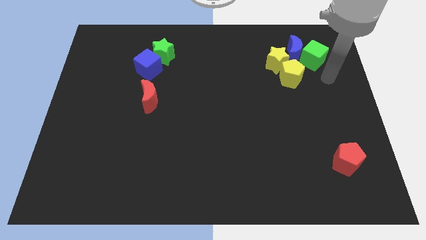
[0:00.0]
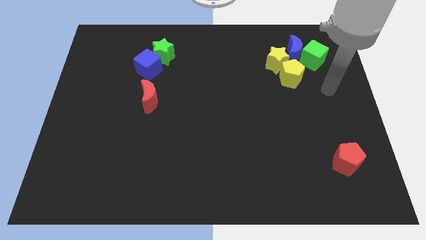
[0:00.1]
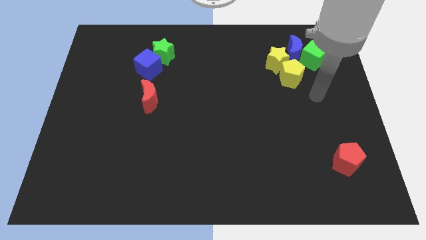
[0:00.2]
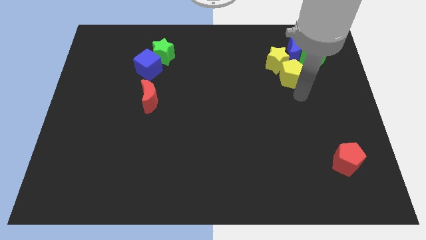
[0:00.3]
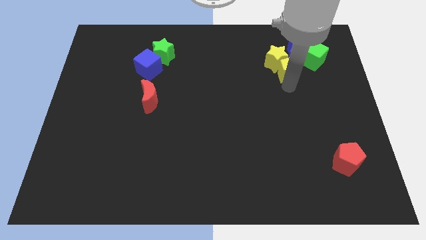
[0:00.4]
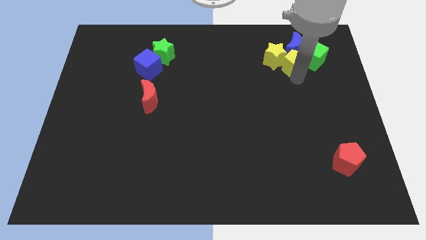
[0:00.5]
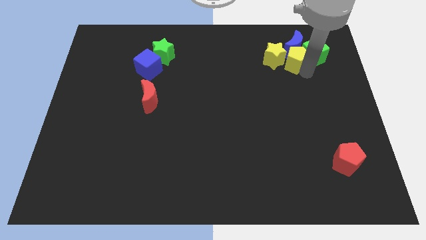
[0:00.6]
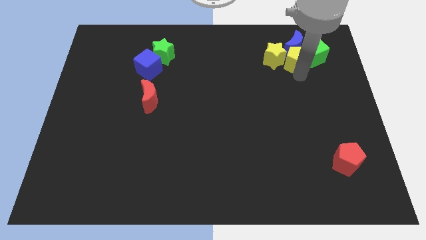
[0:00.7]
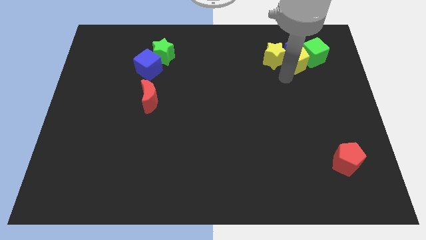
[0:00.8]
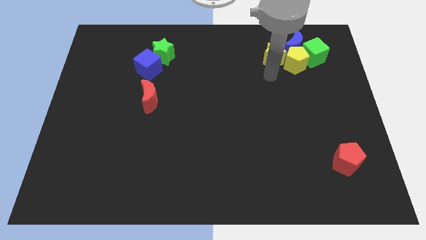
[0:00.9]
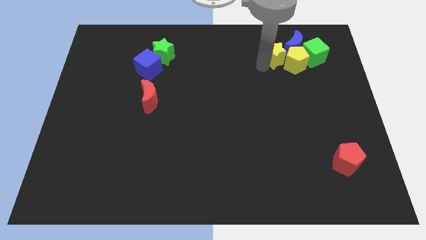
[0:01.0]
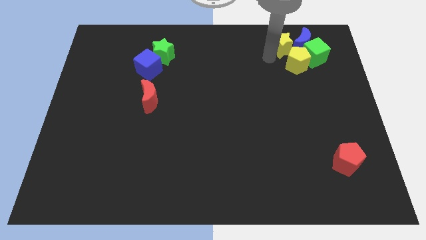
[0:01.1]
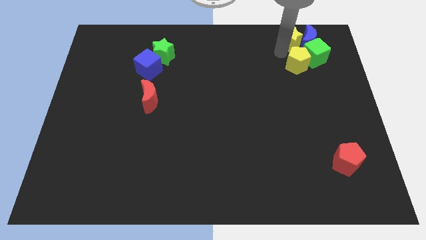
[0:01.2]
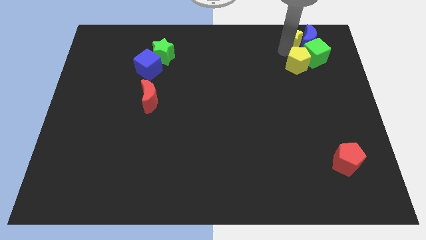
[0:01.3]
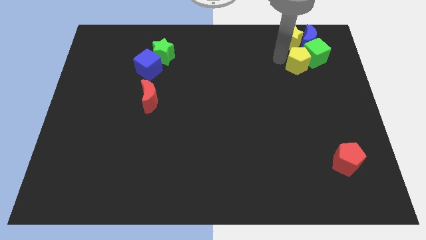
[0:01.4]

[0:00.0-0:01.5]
place the yellow star above the yellow pentagon

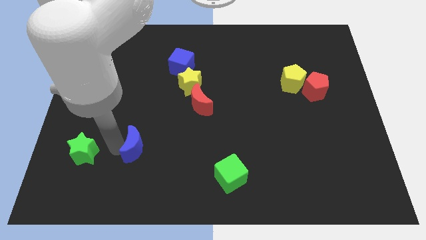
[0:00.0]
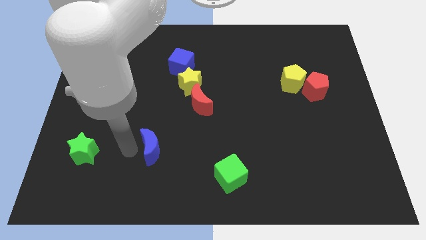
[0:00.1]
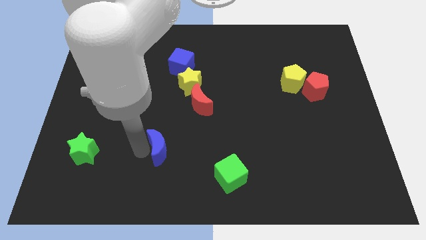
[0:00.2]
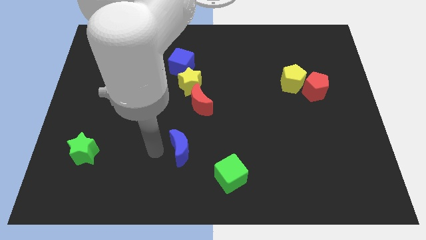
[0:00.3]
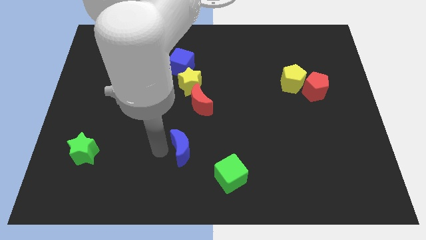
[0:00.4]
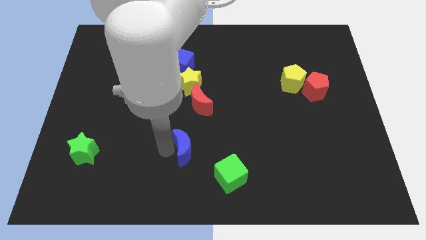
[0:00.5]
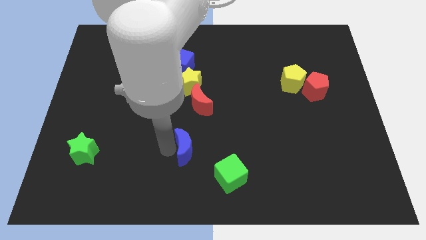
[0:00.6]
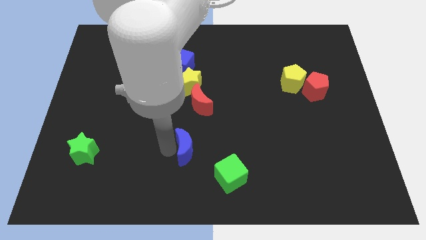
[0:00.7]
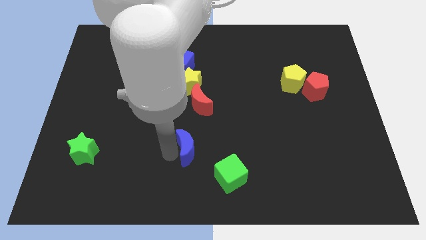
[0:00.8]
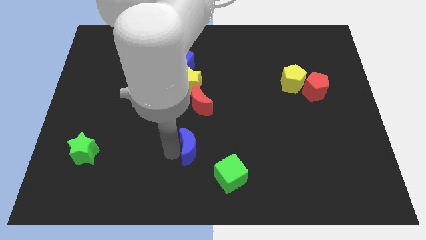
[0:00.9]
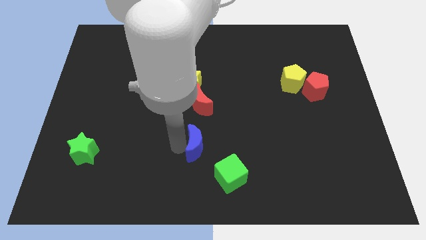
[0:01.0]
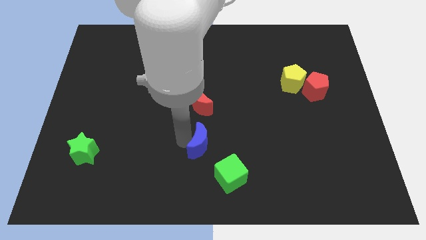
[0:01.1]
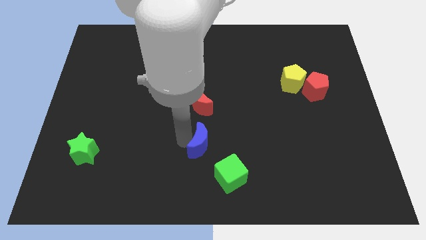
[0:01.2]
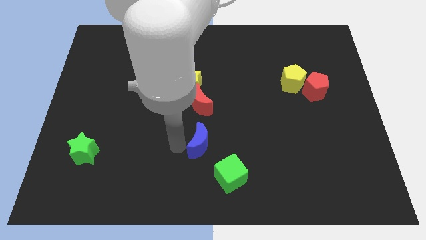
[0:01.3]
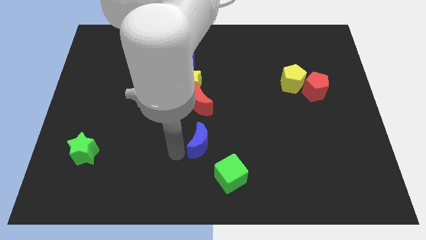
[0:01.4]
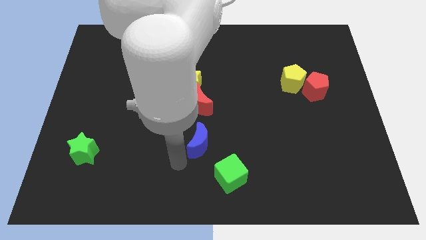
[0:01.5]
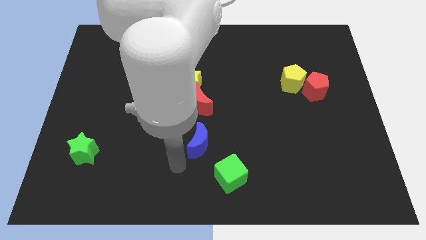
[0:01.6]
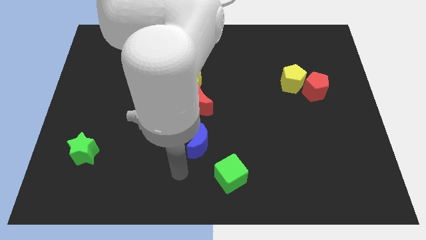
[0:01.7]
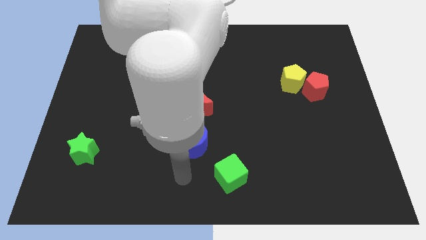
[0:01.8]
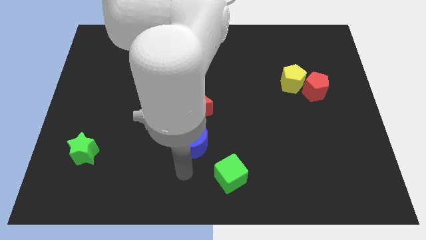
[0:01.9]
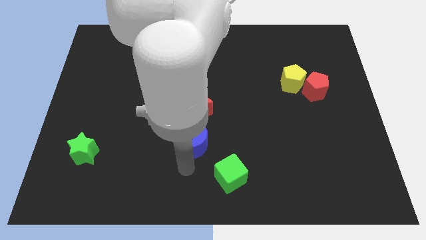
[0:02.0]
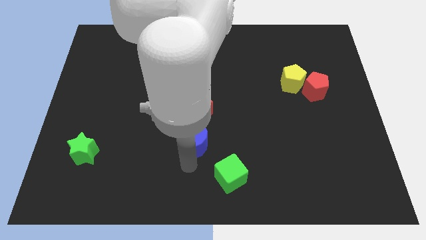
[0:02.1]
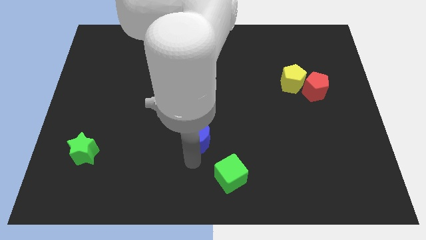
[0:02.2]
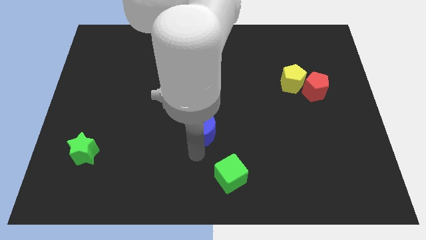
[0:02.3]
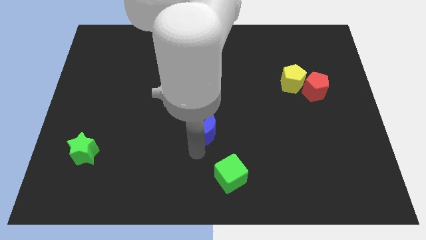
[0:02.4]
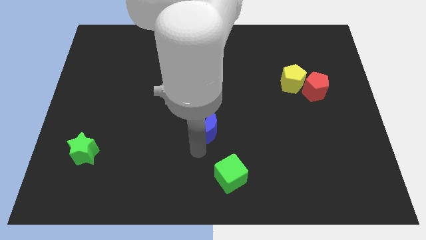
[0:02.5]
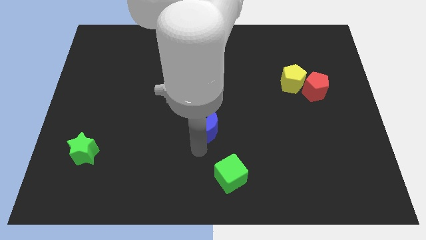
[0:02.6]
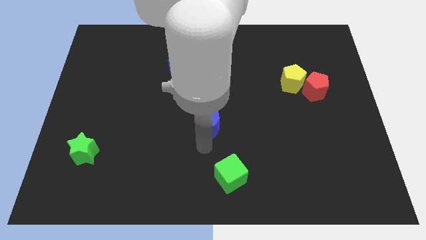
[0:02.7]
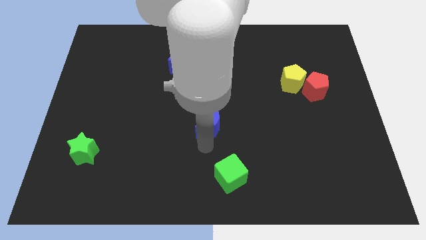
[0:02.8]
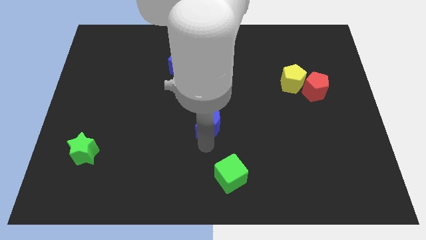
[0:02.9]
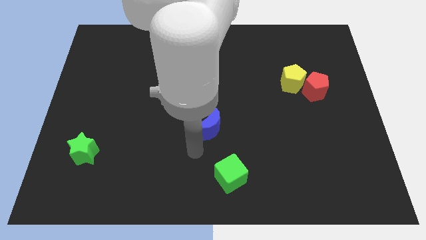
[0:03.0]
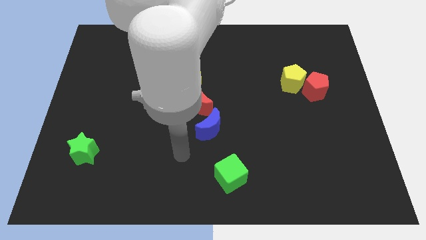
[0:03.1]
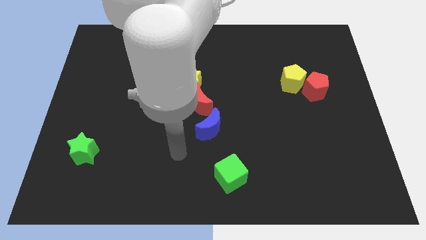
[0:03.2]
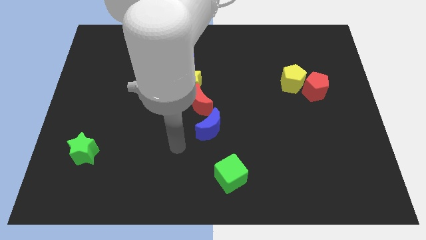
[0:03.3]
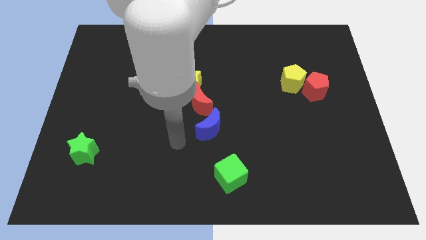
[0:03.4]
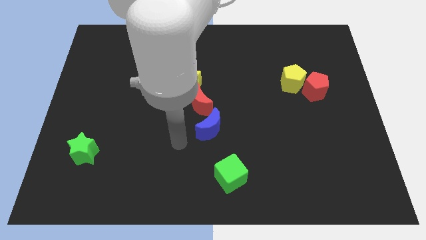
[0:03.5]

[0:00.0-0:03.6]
push the blue moon below the red crescent

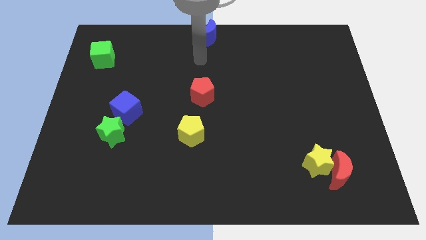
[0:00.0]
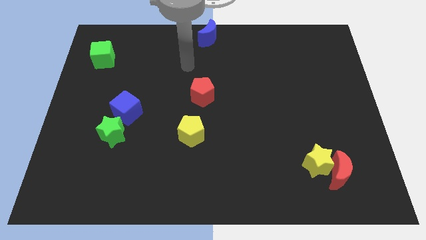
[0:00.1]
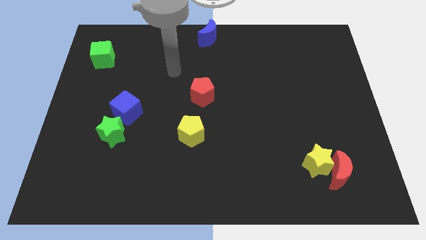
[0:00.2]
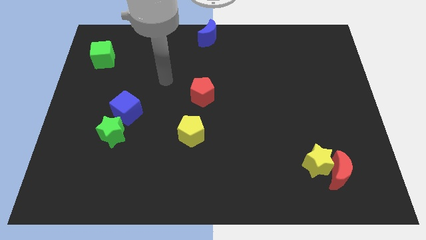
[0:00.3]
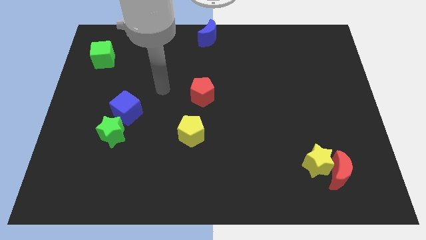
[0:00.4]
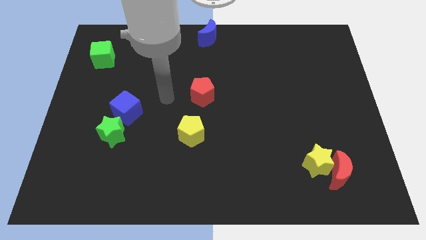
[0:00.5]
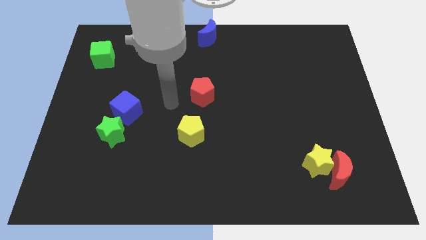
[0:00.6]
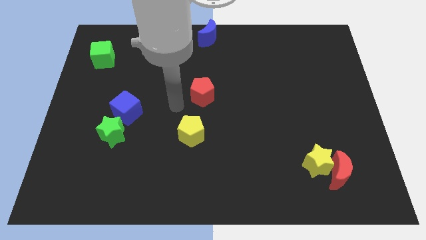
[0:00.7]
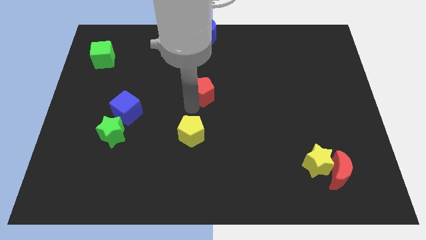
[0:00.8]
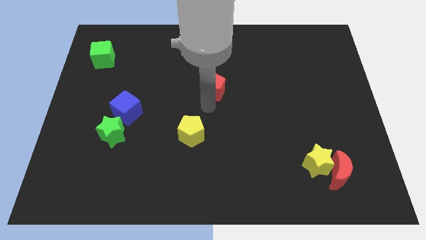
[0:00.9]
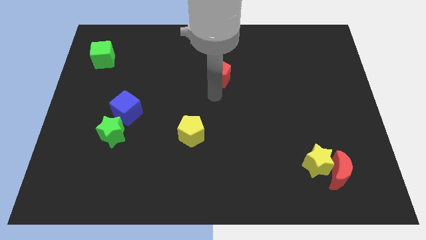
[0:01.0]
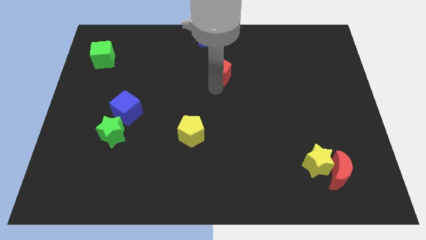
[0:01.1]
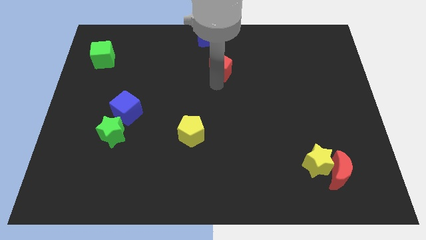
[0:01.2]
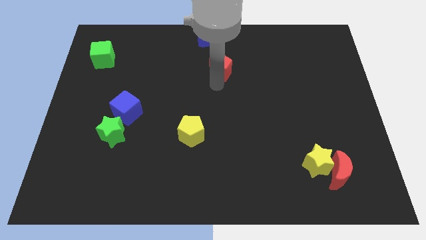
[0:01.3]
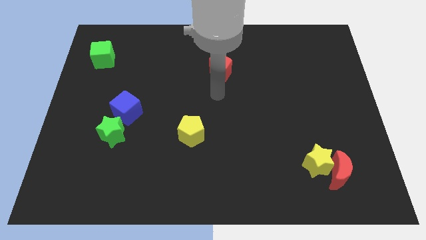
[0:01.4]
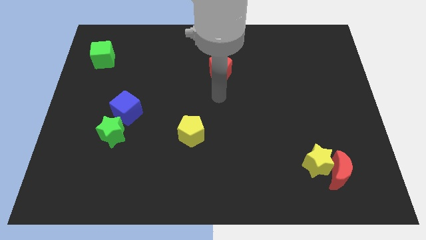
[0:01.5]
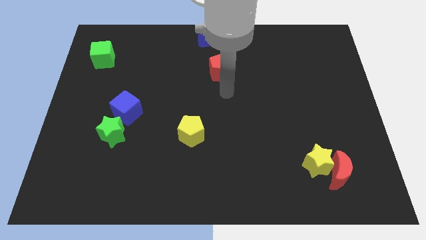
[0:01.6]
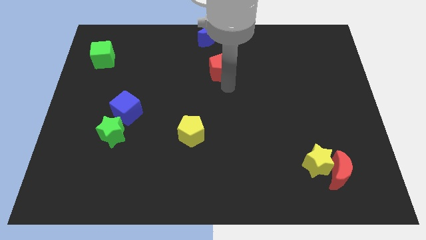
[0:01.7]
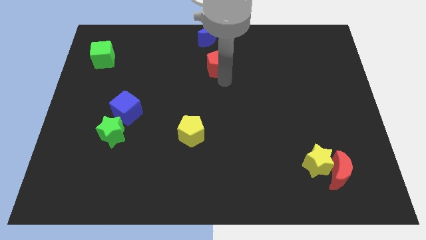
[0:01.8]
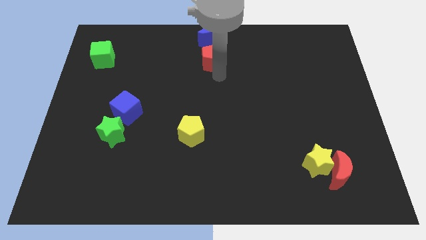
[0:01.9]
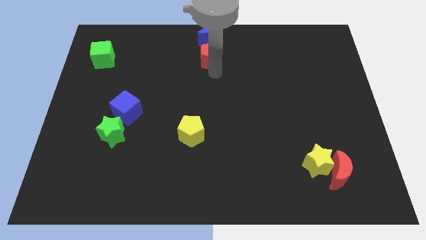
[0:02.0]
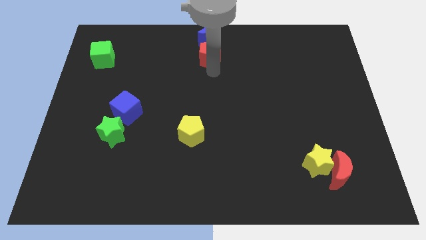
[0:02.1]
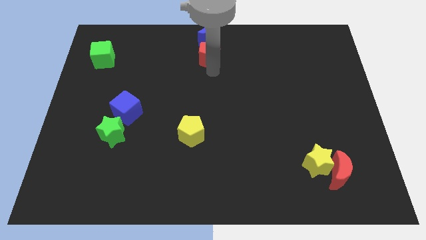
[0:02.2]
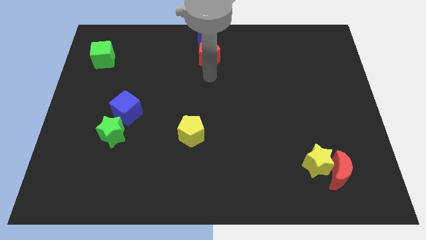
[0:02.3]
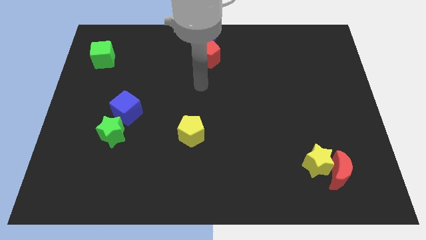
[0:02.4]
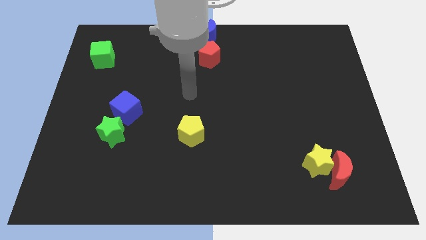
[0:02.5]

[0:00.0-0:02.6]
push the red pentagon close to the blue crescent

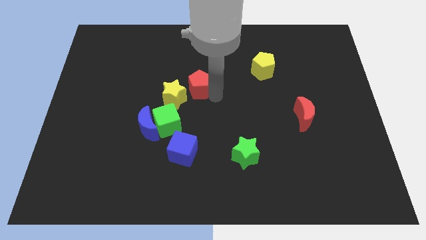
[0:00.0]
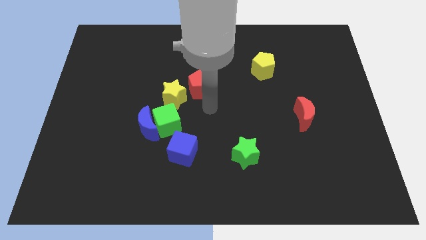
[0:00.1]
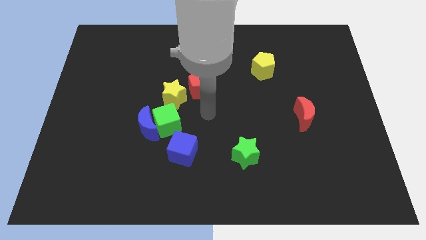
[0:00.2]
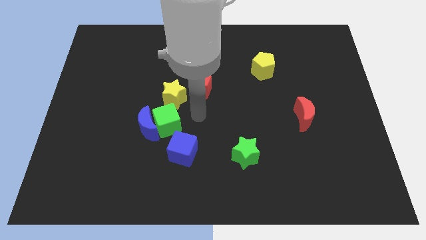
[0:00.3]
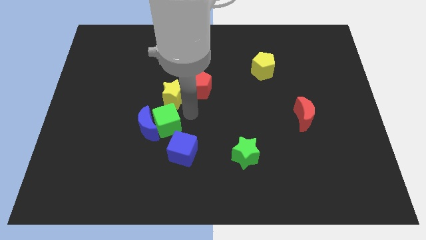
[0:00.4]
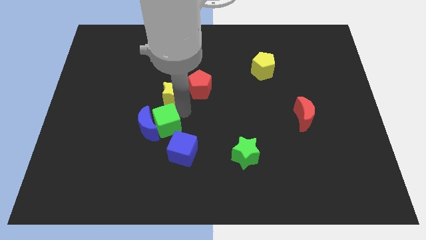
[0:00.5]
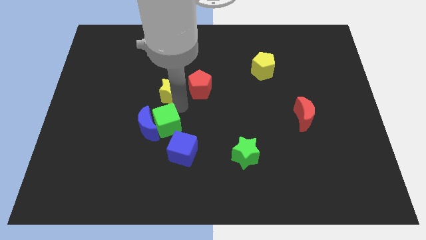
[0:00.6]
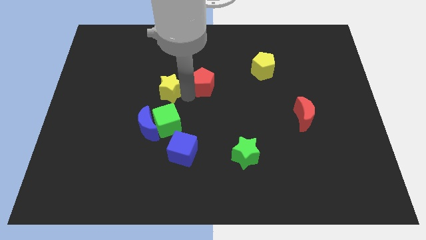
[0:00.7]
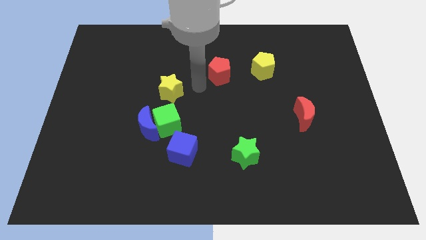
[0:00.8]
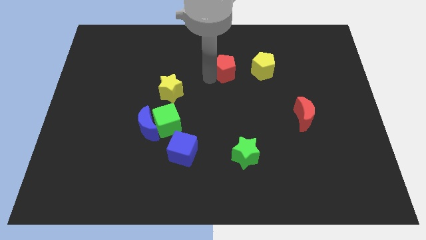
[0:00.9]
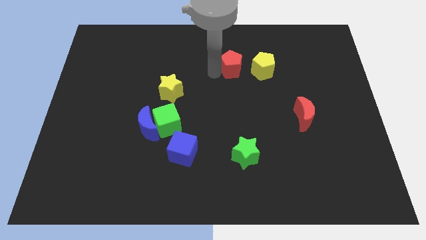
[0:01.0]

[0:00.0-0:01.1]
separate red pentagon from yellow star

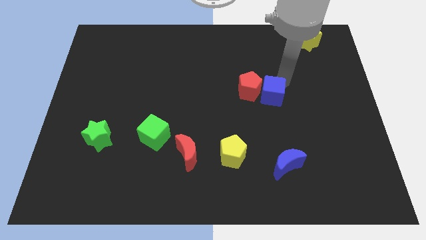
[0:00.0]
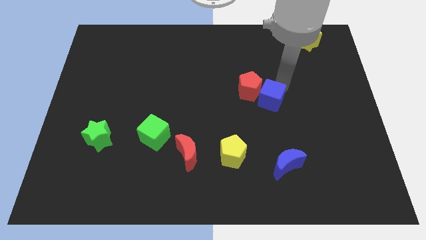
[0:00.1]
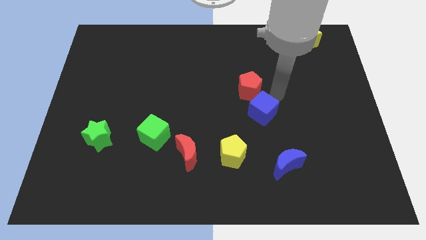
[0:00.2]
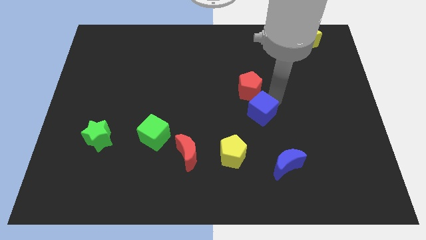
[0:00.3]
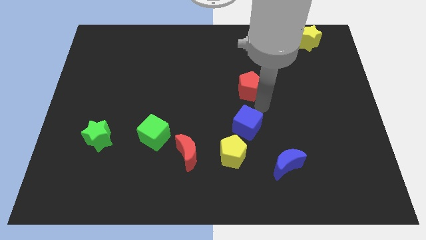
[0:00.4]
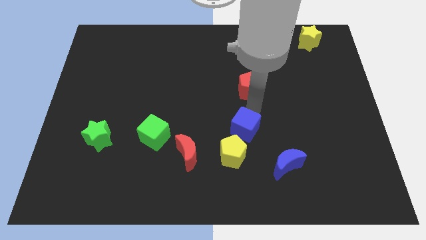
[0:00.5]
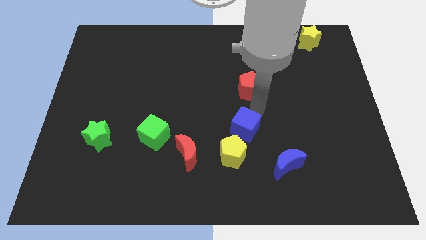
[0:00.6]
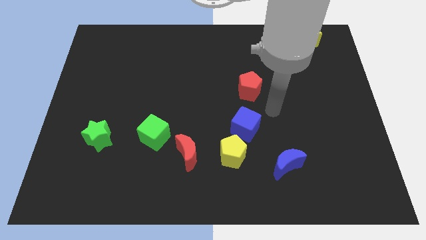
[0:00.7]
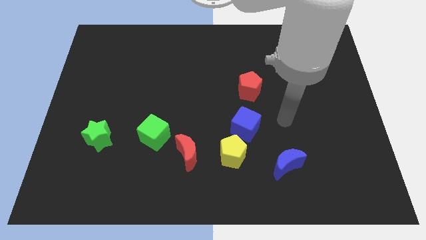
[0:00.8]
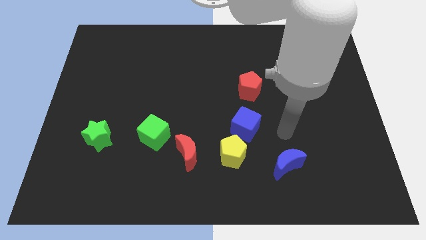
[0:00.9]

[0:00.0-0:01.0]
separate the blue cube from the red pentagon
